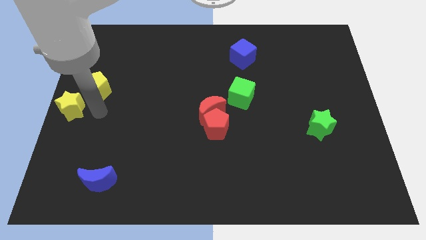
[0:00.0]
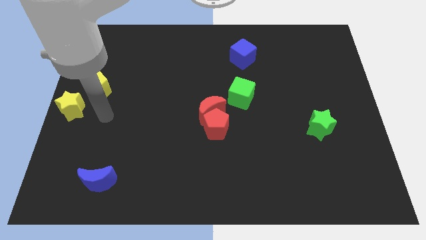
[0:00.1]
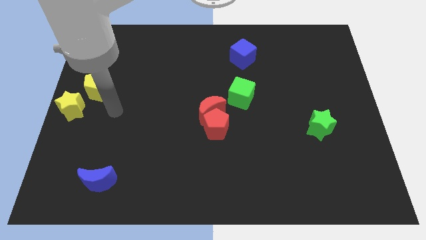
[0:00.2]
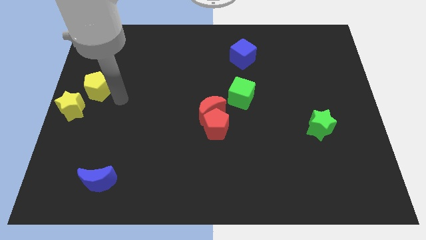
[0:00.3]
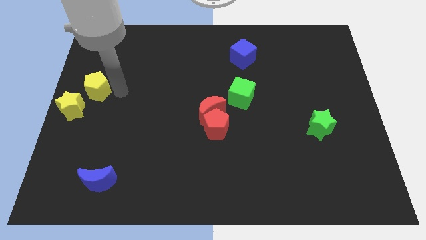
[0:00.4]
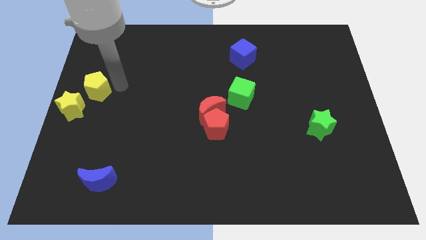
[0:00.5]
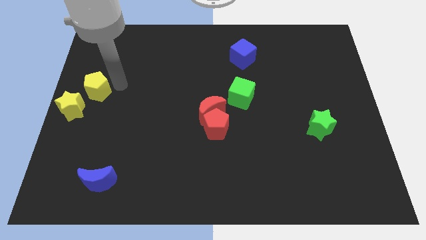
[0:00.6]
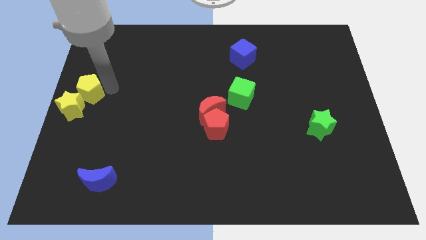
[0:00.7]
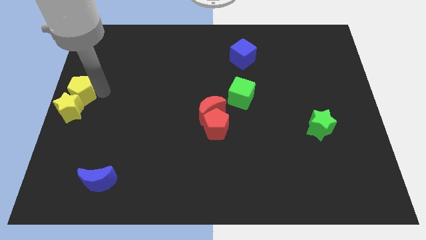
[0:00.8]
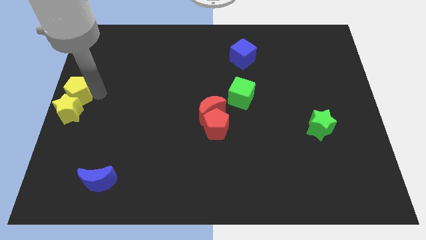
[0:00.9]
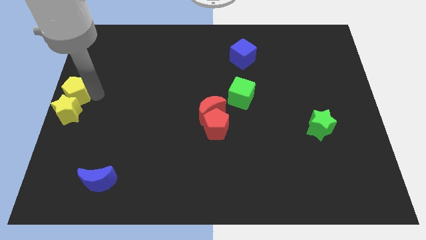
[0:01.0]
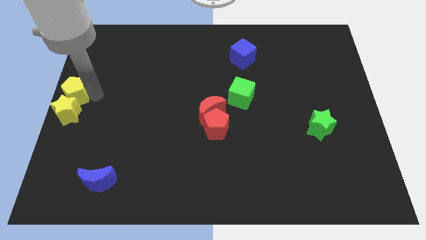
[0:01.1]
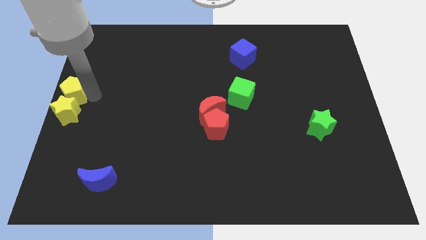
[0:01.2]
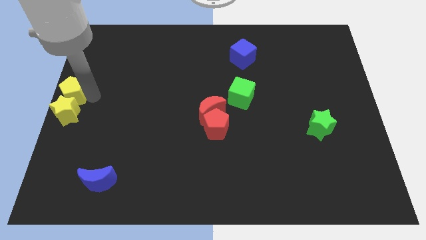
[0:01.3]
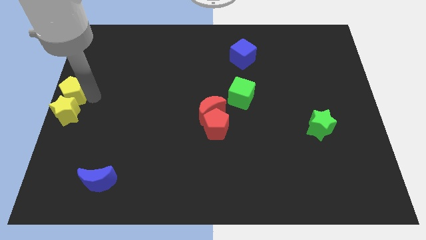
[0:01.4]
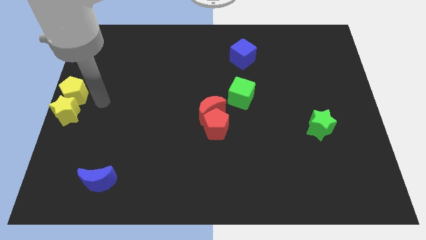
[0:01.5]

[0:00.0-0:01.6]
move the yellow pentagon into the yellow star

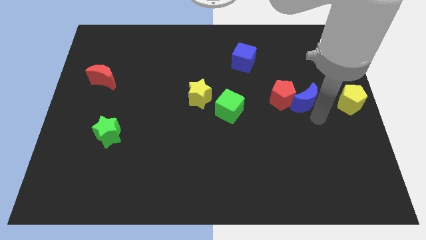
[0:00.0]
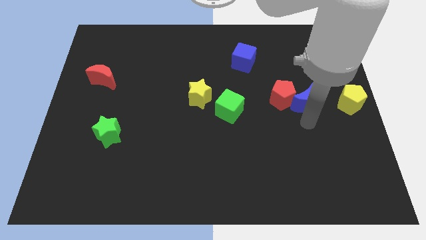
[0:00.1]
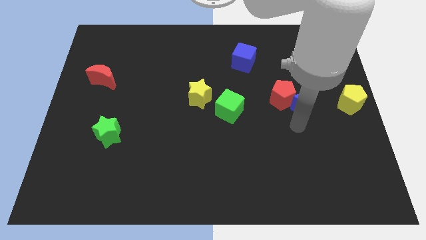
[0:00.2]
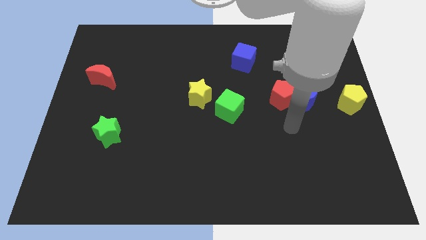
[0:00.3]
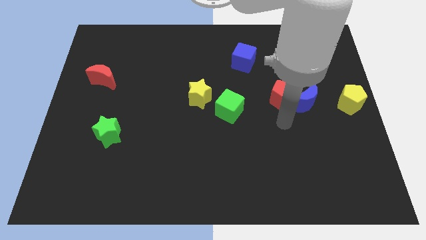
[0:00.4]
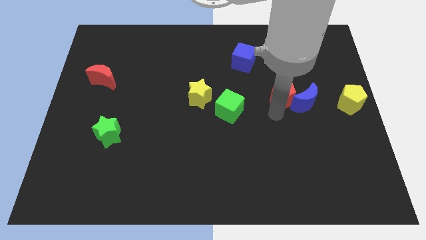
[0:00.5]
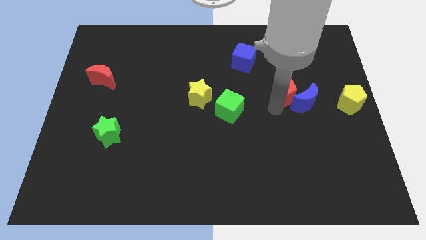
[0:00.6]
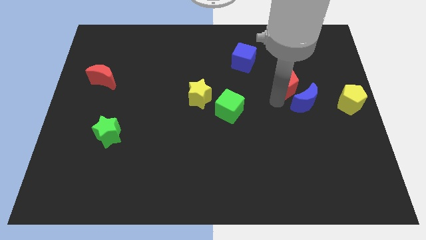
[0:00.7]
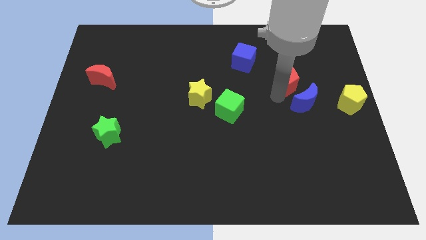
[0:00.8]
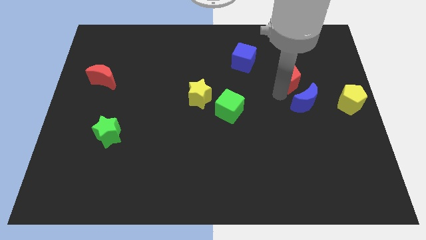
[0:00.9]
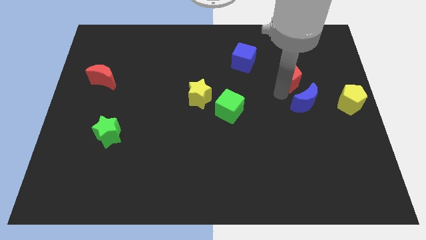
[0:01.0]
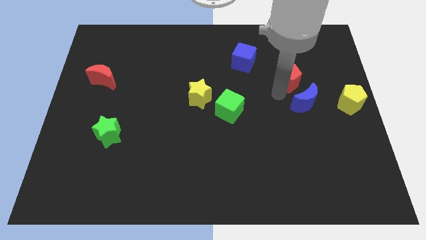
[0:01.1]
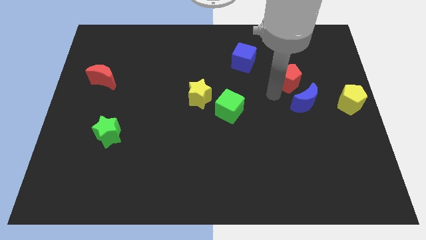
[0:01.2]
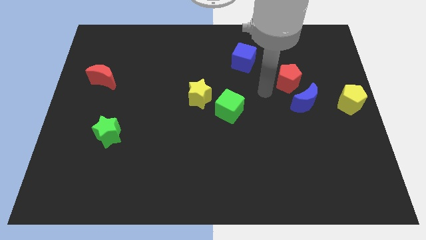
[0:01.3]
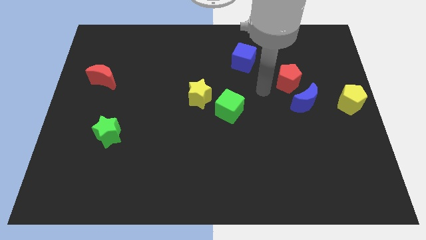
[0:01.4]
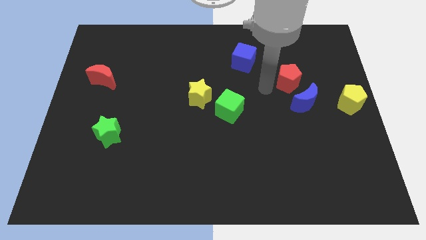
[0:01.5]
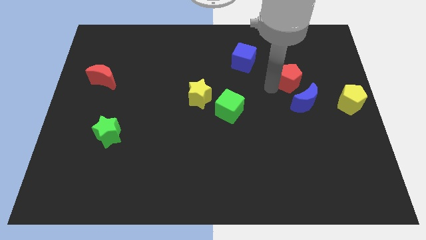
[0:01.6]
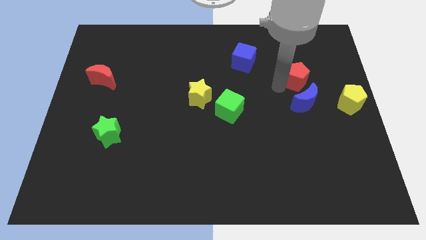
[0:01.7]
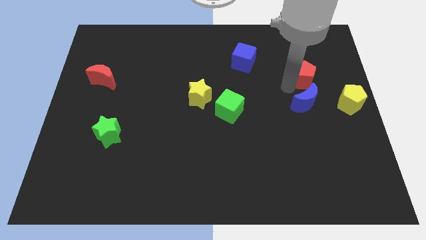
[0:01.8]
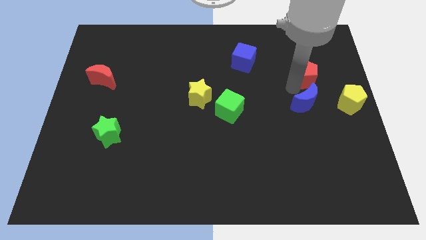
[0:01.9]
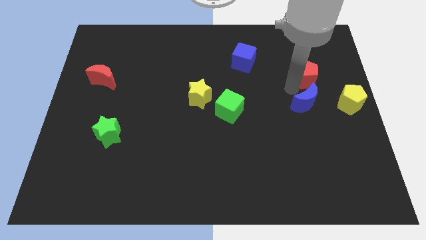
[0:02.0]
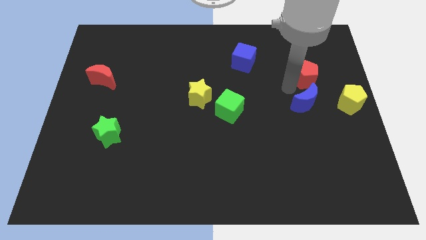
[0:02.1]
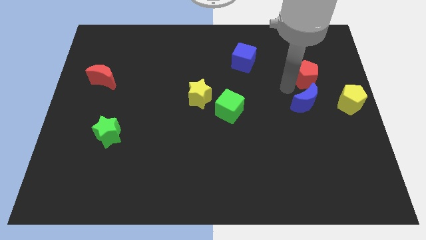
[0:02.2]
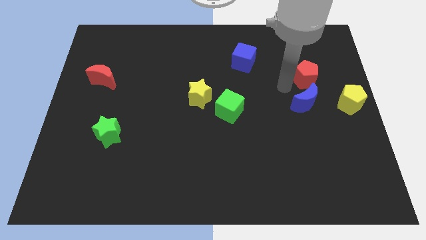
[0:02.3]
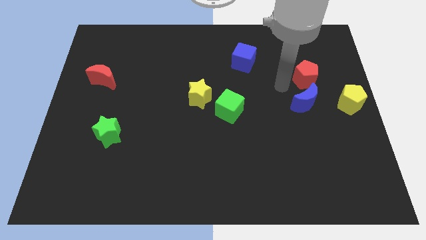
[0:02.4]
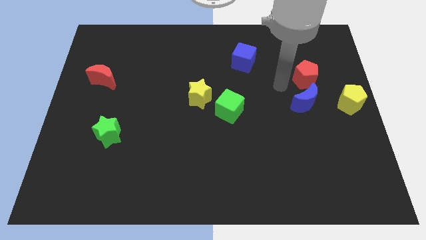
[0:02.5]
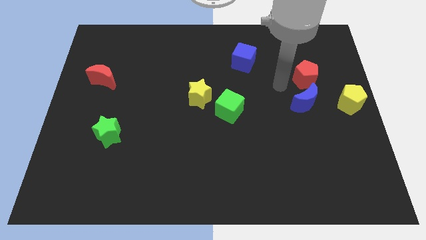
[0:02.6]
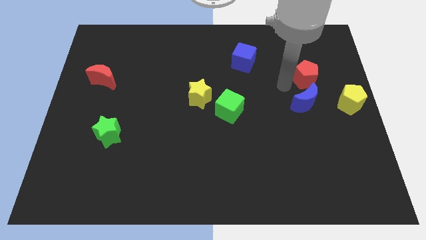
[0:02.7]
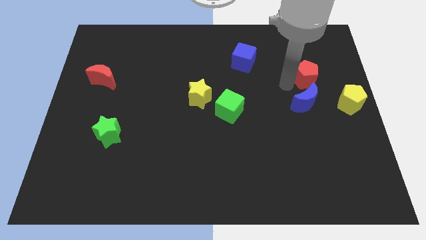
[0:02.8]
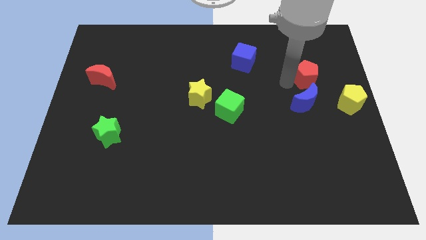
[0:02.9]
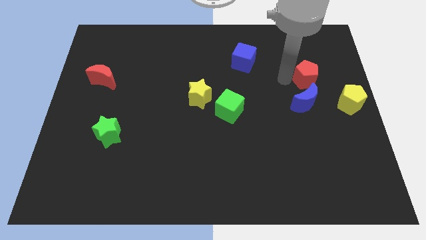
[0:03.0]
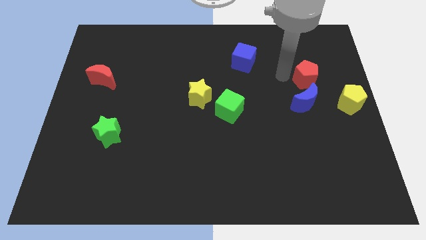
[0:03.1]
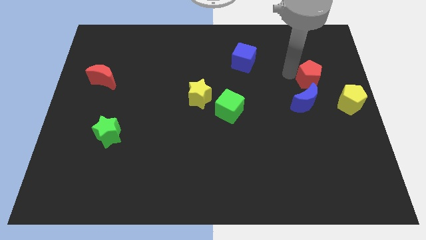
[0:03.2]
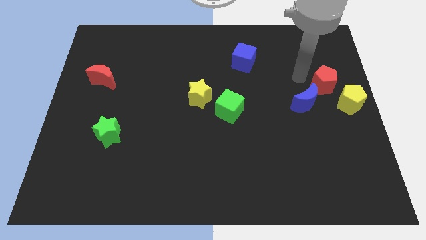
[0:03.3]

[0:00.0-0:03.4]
push red pentagon above blue crescent

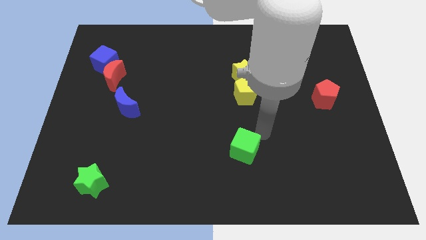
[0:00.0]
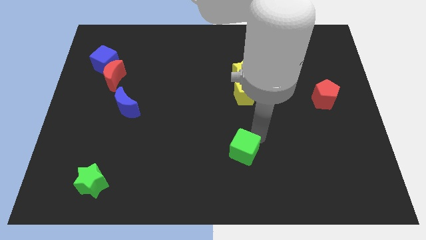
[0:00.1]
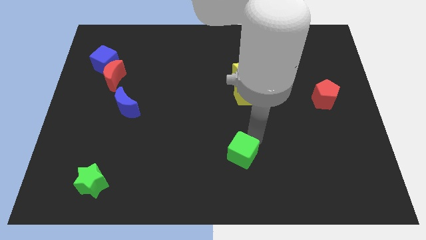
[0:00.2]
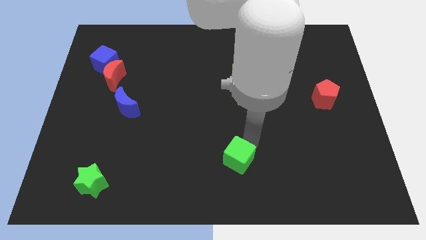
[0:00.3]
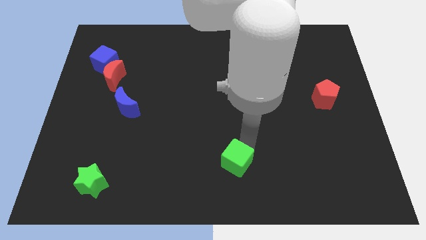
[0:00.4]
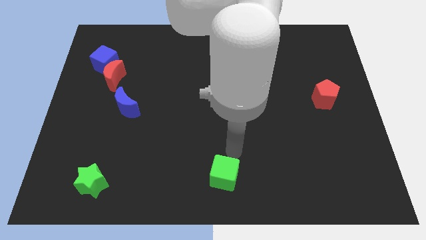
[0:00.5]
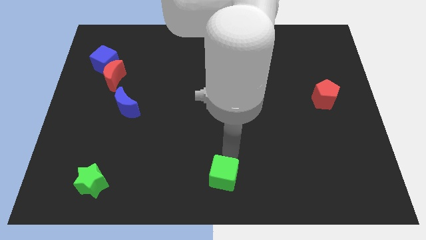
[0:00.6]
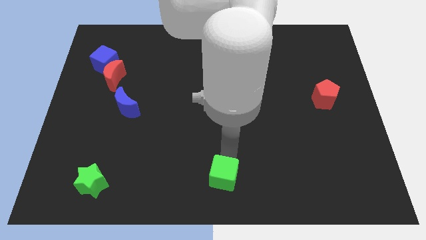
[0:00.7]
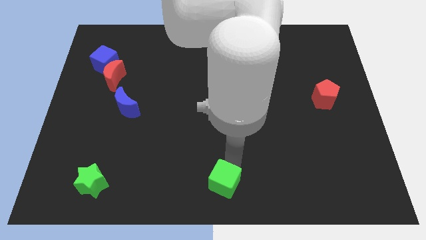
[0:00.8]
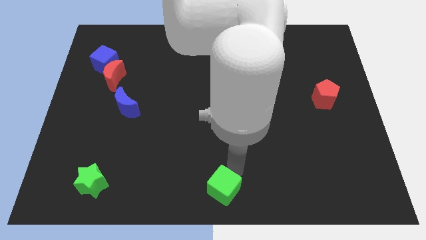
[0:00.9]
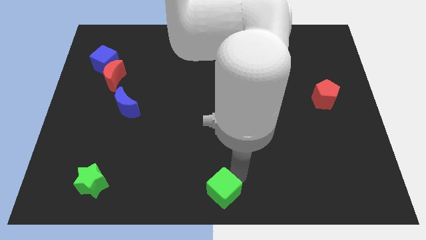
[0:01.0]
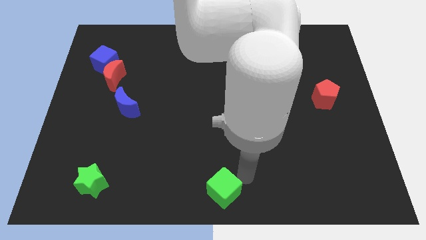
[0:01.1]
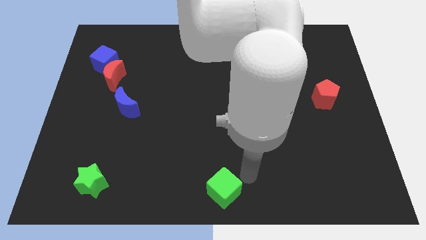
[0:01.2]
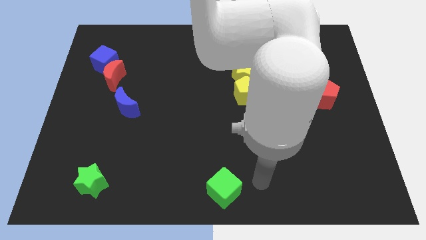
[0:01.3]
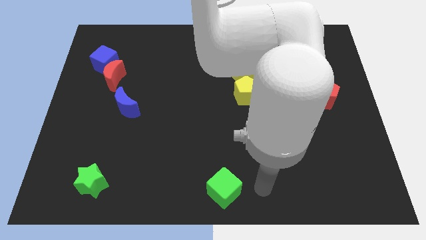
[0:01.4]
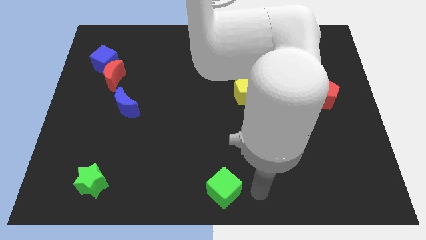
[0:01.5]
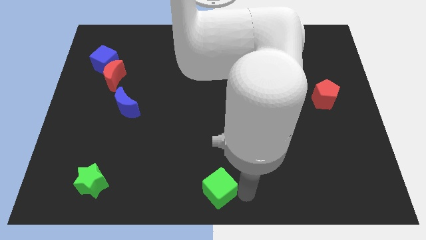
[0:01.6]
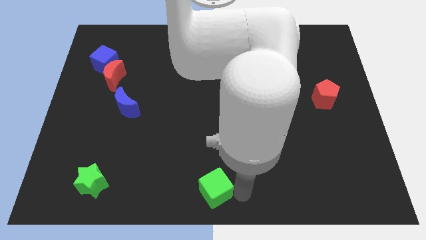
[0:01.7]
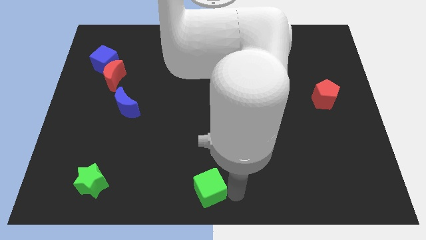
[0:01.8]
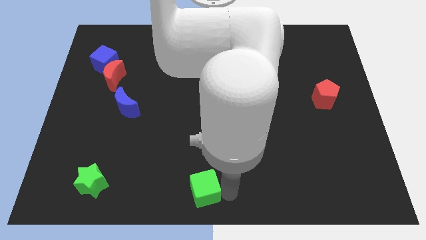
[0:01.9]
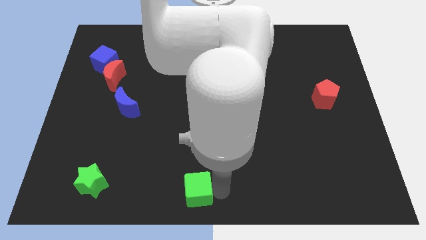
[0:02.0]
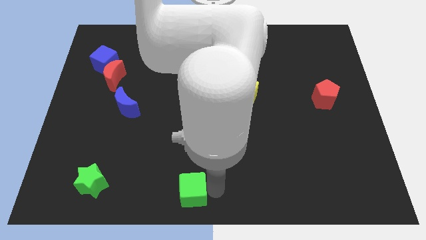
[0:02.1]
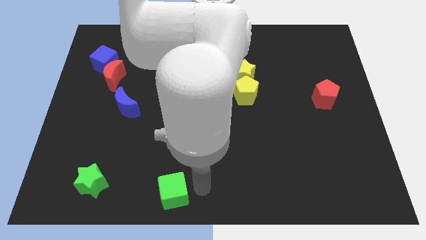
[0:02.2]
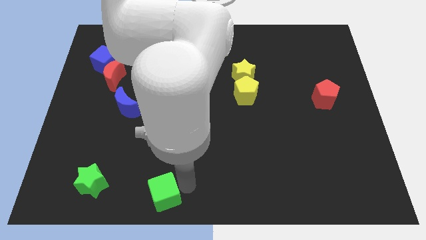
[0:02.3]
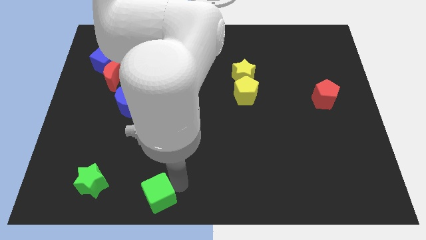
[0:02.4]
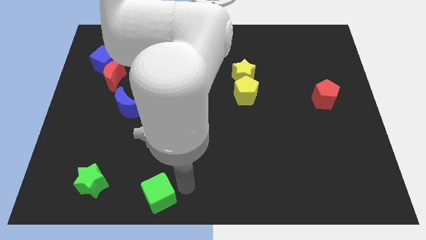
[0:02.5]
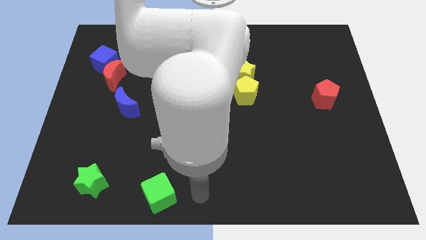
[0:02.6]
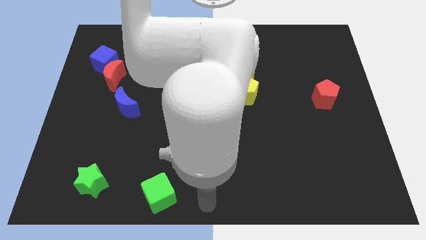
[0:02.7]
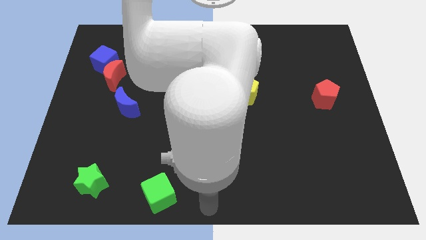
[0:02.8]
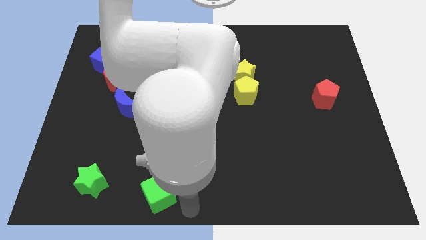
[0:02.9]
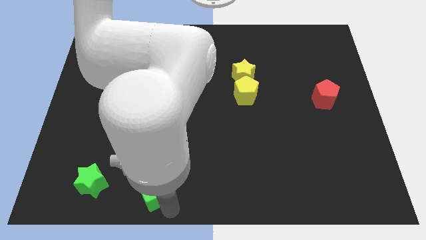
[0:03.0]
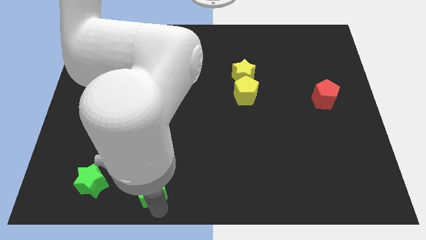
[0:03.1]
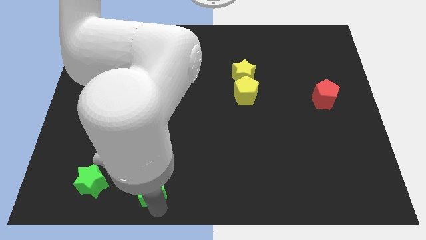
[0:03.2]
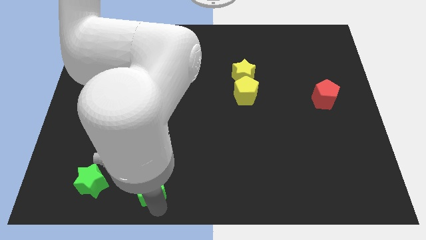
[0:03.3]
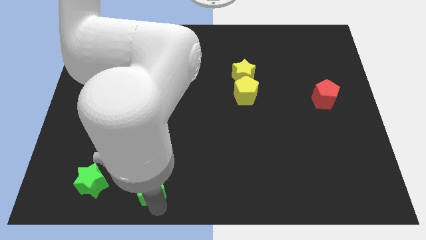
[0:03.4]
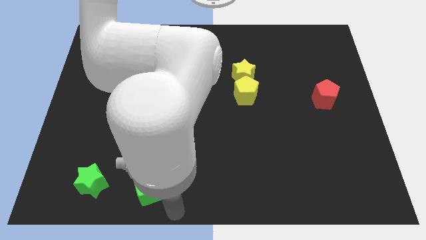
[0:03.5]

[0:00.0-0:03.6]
place the green cube right to the green star

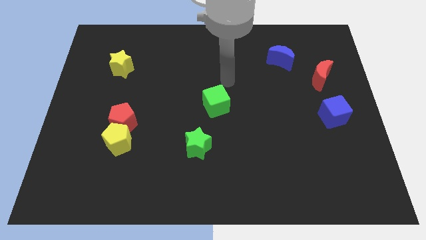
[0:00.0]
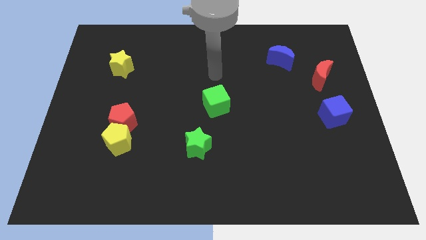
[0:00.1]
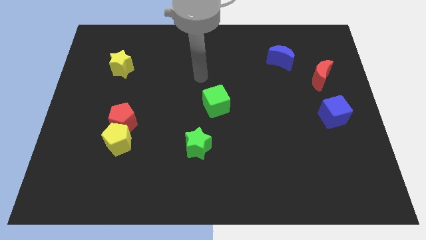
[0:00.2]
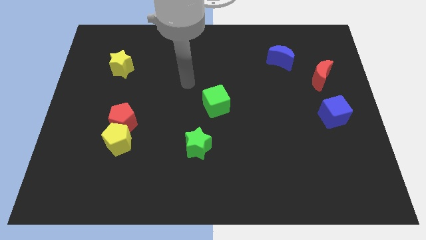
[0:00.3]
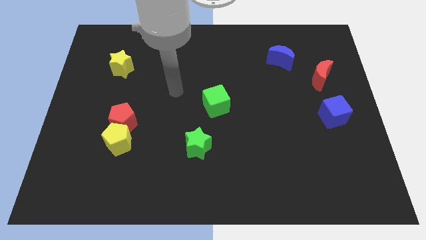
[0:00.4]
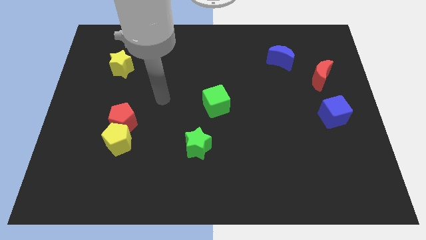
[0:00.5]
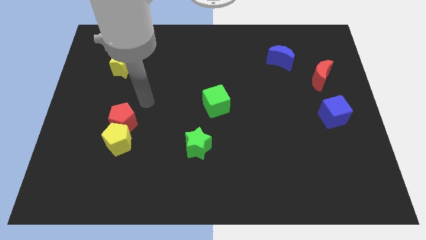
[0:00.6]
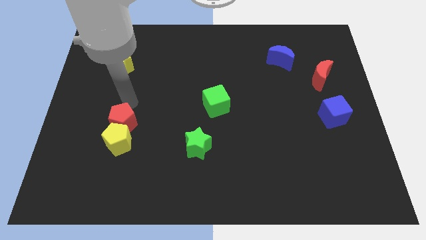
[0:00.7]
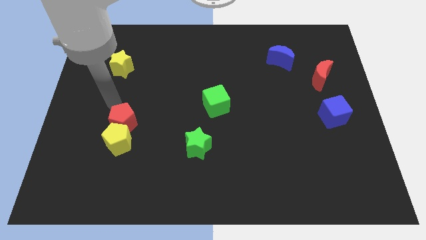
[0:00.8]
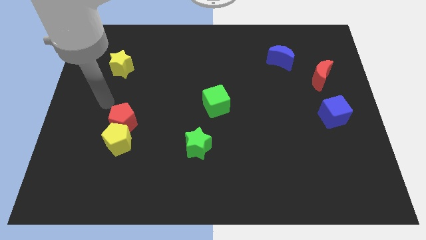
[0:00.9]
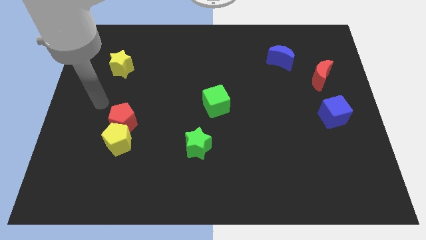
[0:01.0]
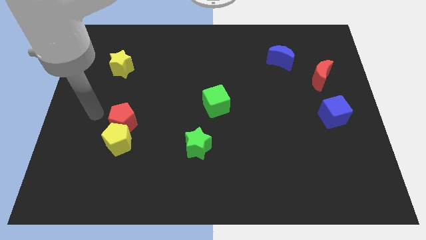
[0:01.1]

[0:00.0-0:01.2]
move the arm away from the green cube
